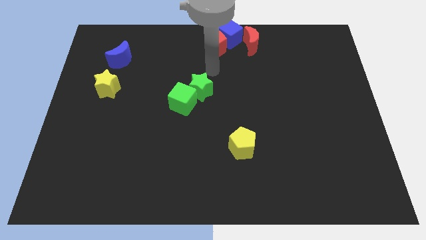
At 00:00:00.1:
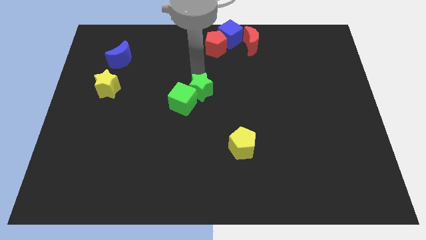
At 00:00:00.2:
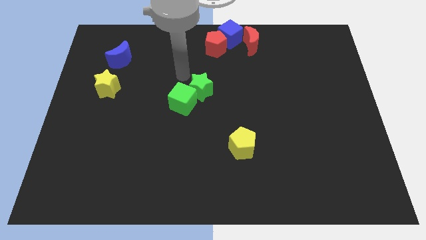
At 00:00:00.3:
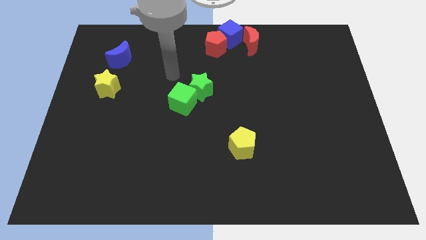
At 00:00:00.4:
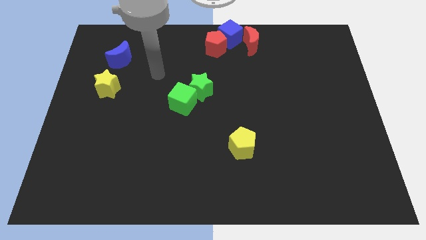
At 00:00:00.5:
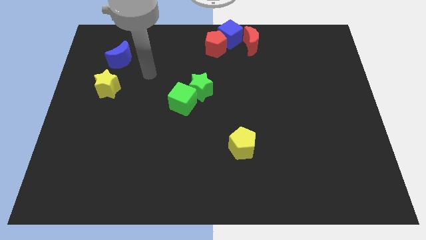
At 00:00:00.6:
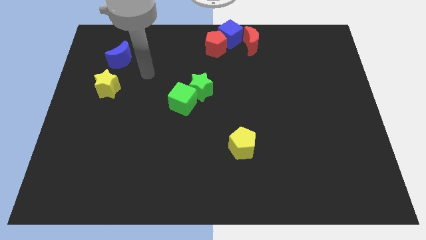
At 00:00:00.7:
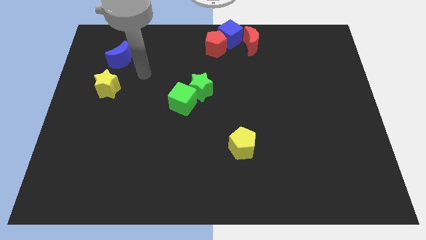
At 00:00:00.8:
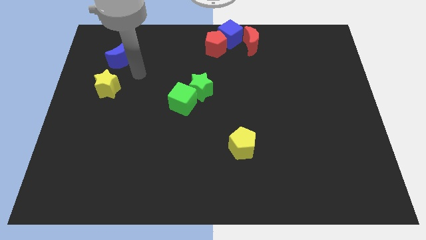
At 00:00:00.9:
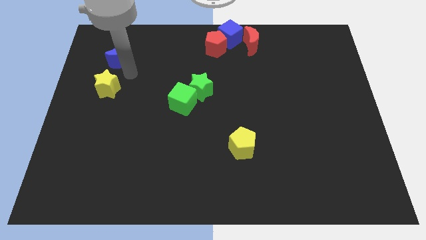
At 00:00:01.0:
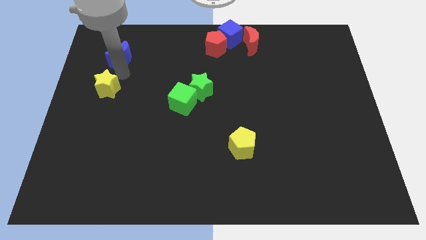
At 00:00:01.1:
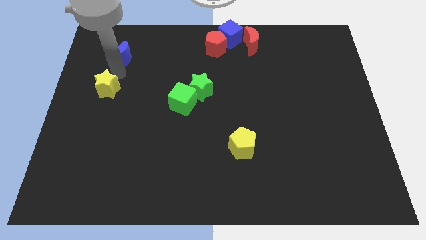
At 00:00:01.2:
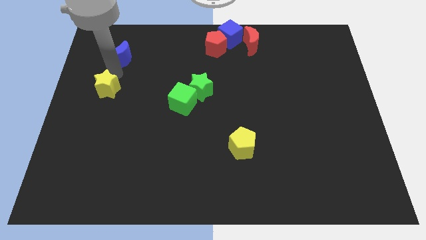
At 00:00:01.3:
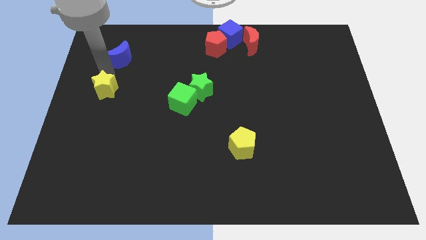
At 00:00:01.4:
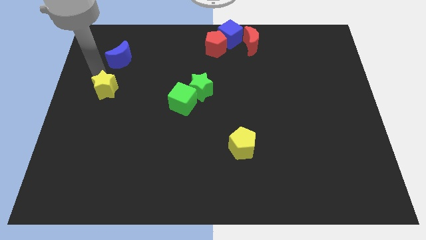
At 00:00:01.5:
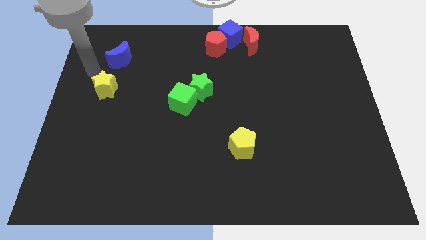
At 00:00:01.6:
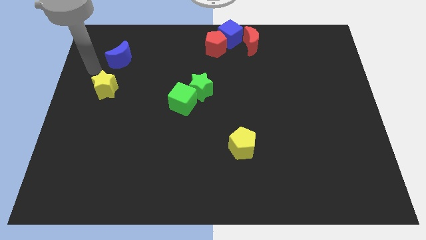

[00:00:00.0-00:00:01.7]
push the arm towards the yellow star

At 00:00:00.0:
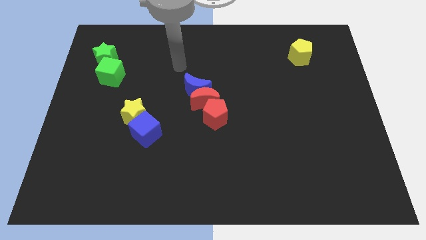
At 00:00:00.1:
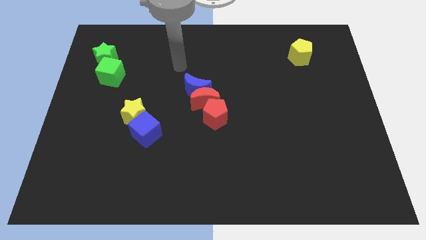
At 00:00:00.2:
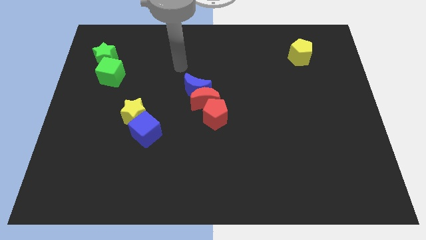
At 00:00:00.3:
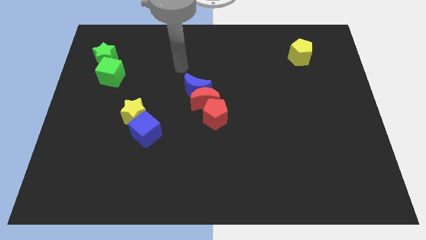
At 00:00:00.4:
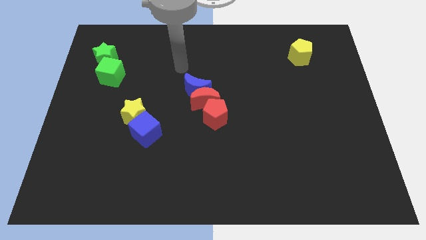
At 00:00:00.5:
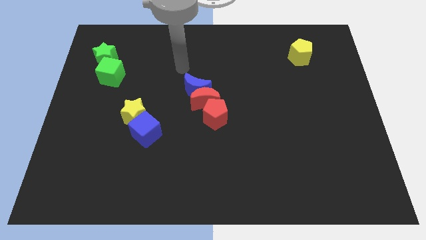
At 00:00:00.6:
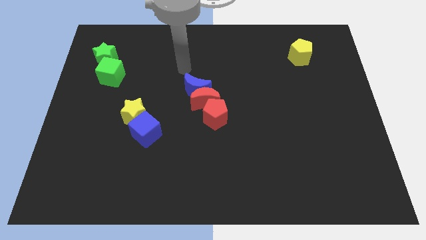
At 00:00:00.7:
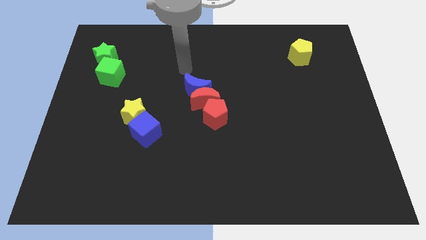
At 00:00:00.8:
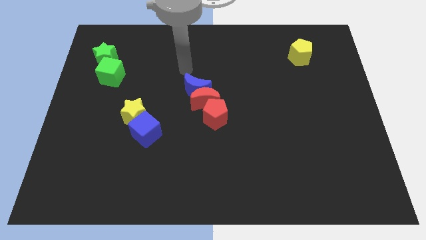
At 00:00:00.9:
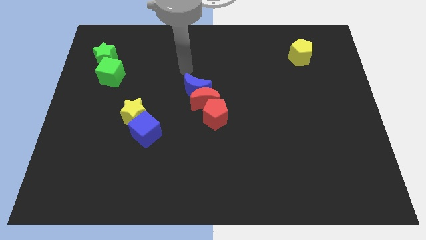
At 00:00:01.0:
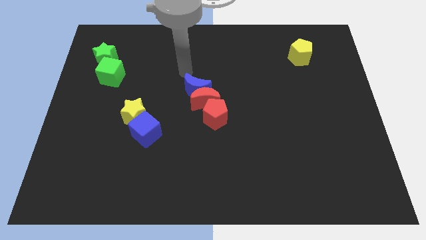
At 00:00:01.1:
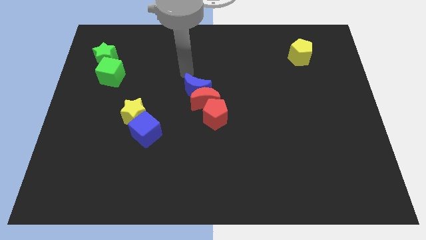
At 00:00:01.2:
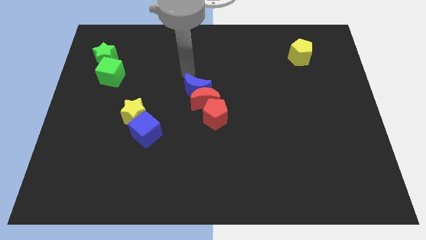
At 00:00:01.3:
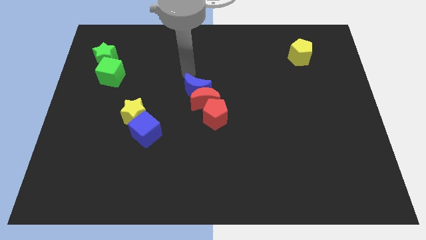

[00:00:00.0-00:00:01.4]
point your arm at the top of blue moon

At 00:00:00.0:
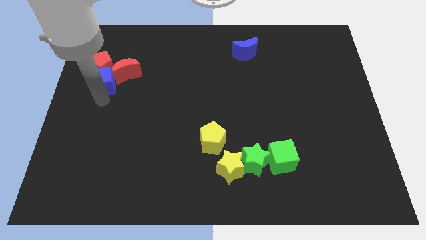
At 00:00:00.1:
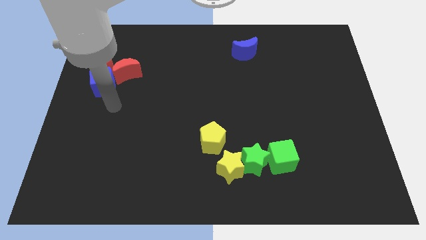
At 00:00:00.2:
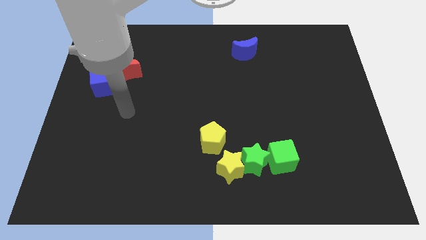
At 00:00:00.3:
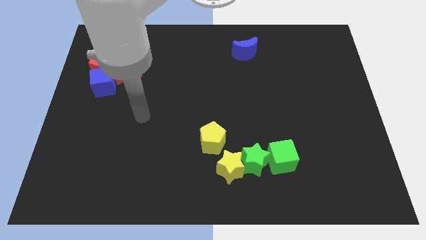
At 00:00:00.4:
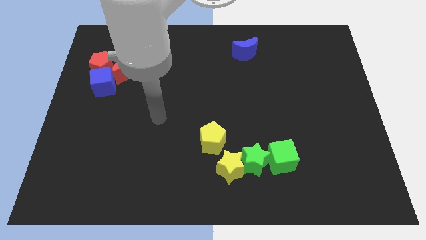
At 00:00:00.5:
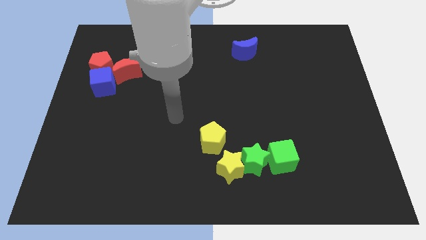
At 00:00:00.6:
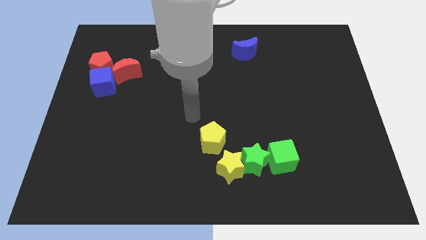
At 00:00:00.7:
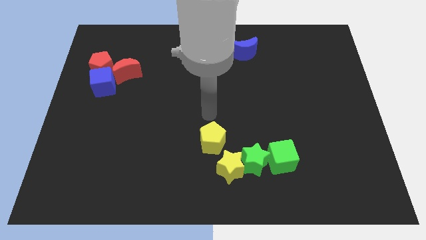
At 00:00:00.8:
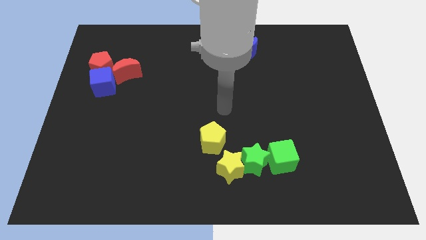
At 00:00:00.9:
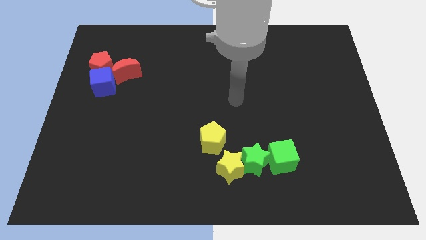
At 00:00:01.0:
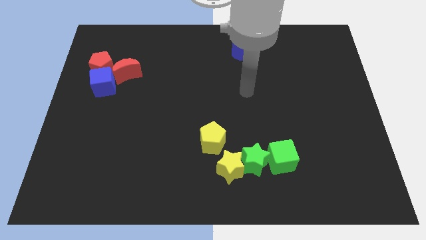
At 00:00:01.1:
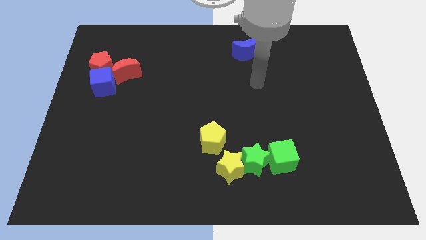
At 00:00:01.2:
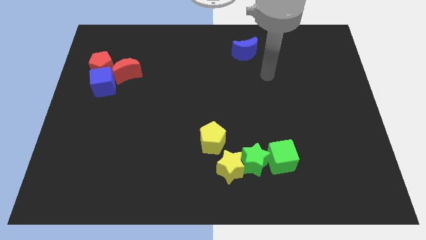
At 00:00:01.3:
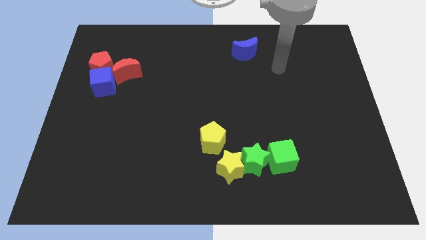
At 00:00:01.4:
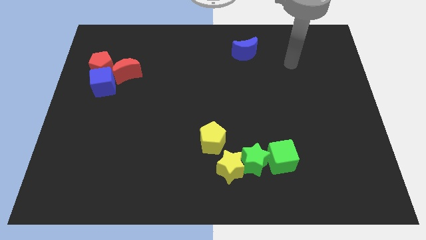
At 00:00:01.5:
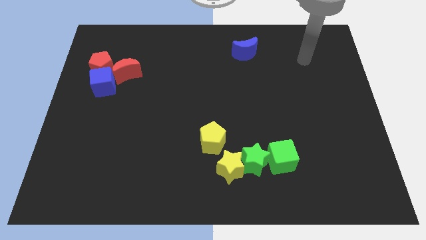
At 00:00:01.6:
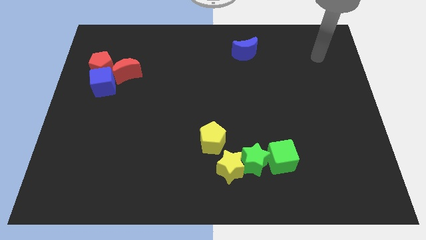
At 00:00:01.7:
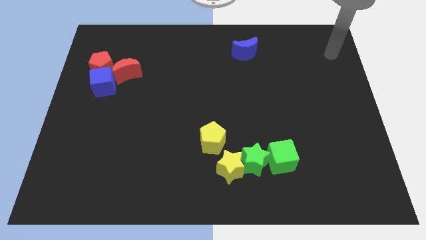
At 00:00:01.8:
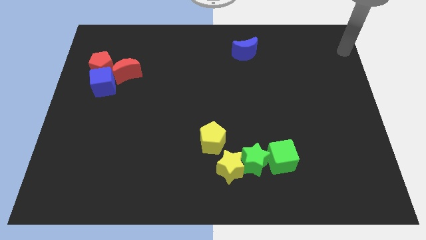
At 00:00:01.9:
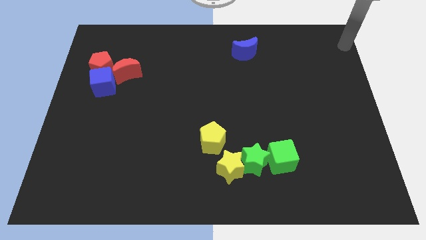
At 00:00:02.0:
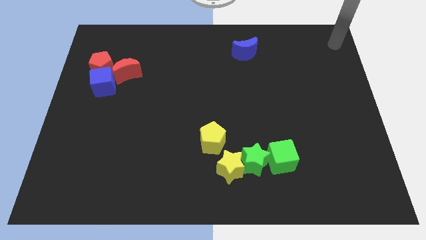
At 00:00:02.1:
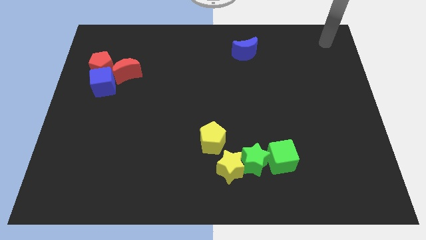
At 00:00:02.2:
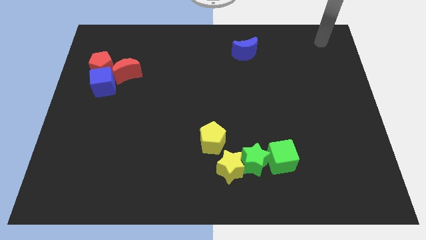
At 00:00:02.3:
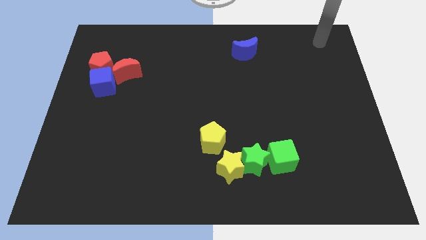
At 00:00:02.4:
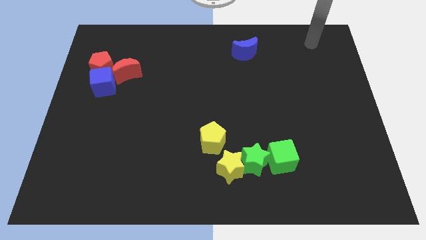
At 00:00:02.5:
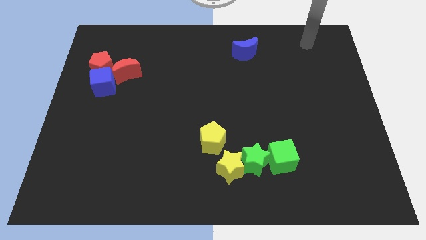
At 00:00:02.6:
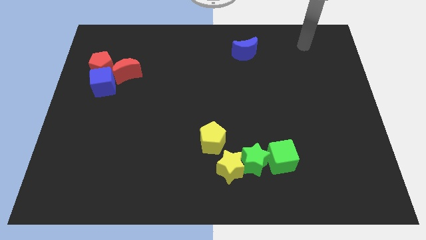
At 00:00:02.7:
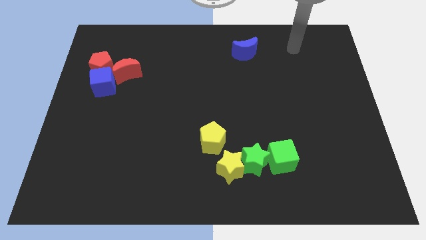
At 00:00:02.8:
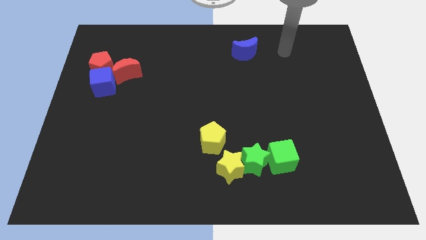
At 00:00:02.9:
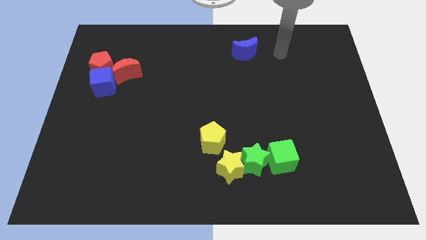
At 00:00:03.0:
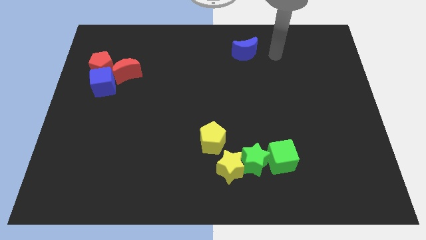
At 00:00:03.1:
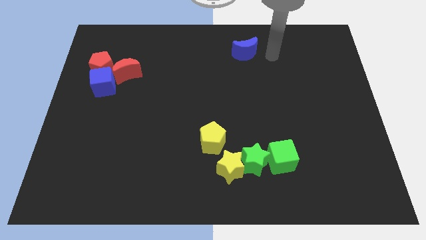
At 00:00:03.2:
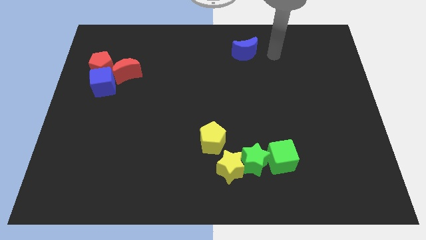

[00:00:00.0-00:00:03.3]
go to the right side of the blue crescent

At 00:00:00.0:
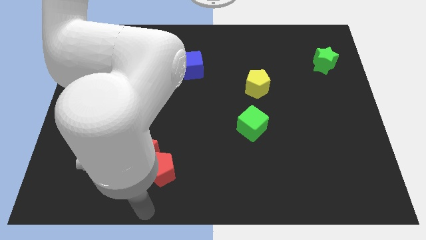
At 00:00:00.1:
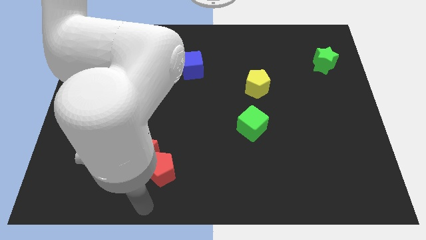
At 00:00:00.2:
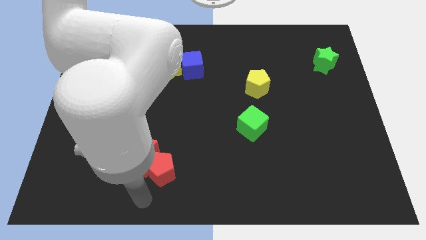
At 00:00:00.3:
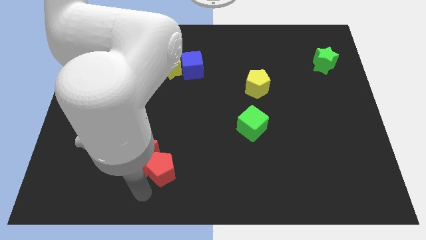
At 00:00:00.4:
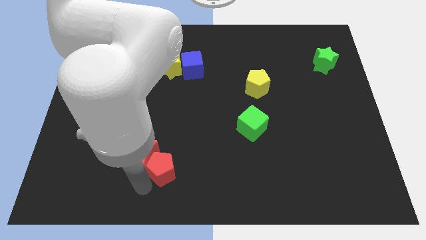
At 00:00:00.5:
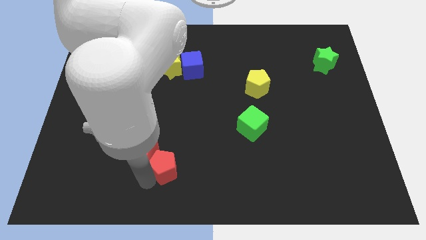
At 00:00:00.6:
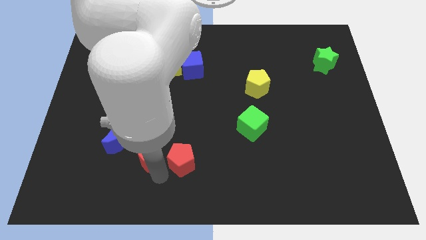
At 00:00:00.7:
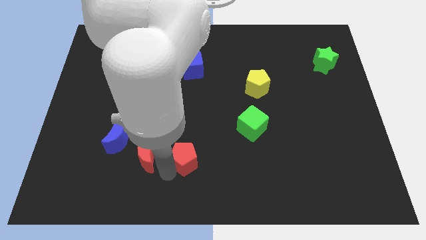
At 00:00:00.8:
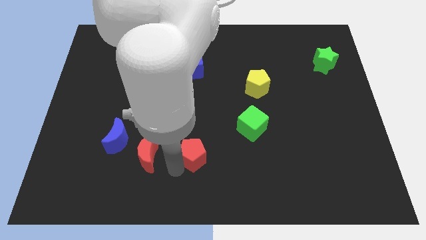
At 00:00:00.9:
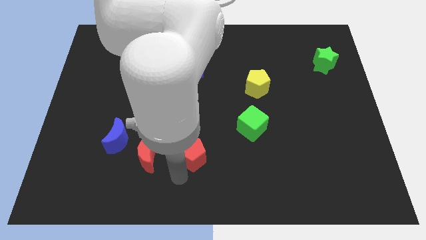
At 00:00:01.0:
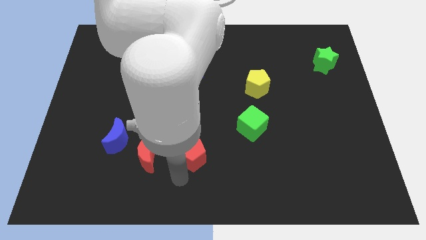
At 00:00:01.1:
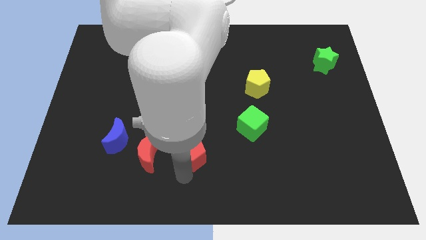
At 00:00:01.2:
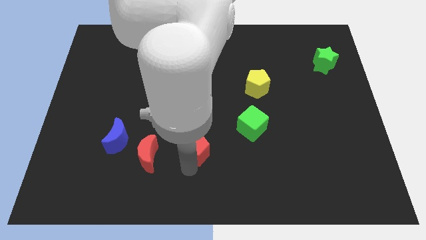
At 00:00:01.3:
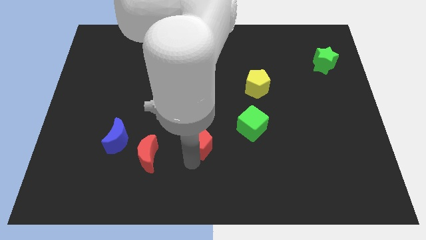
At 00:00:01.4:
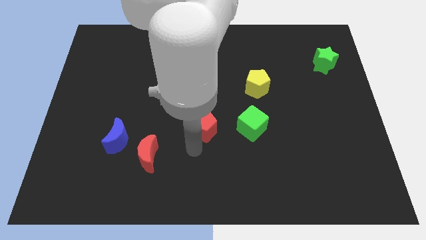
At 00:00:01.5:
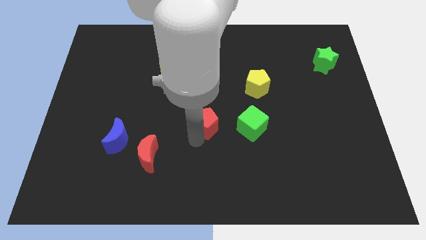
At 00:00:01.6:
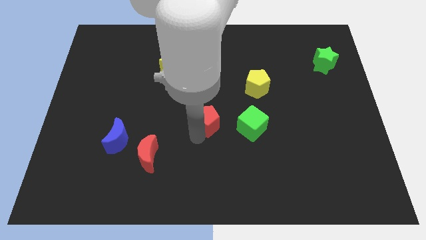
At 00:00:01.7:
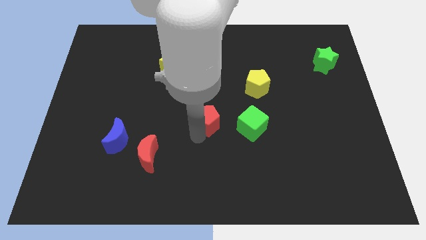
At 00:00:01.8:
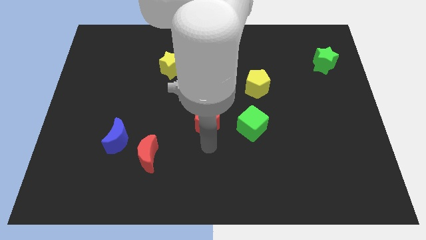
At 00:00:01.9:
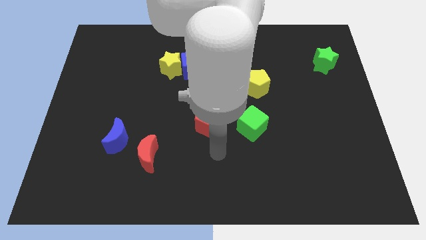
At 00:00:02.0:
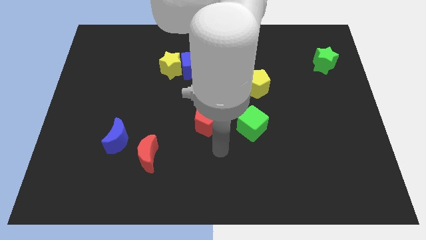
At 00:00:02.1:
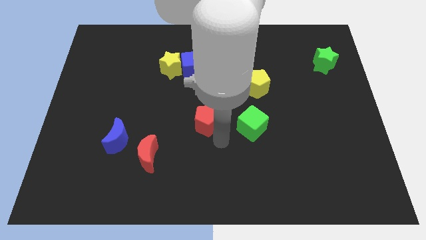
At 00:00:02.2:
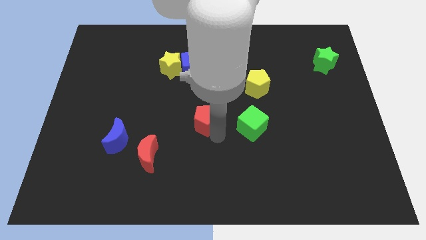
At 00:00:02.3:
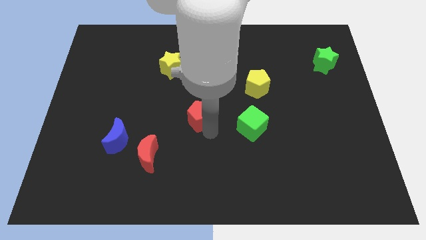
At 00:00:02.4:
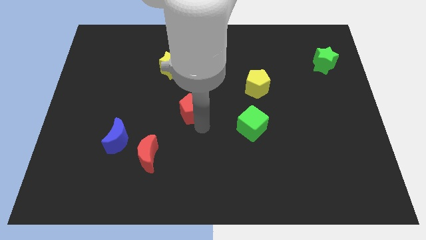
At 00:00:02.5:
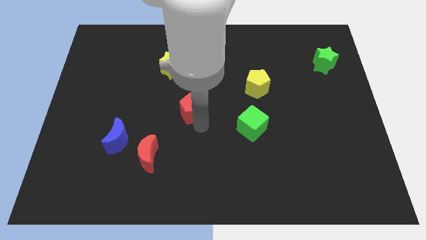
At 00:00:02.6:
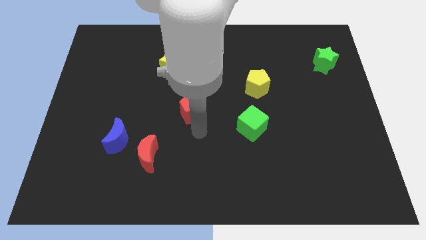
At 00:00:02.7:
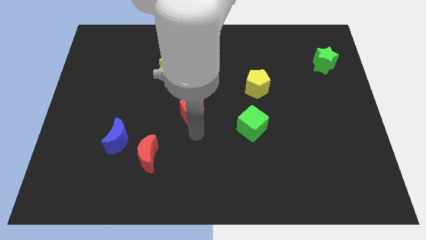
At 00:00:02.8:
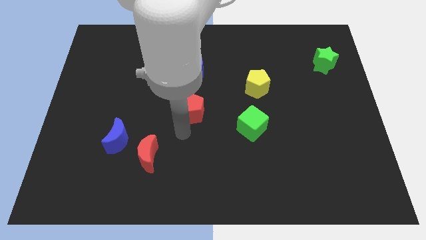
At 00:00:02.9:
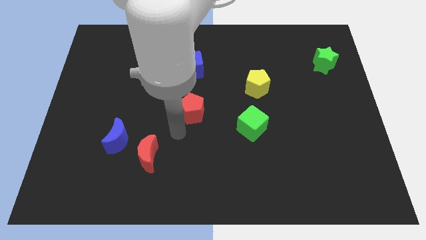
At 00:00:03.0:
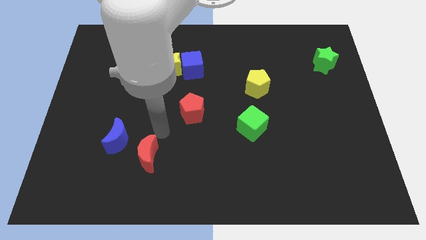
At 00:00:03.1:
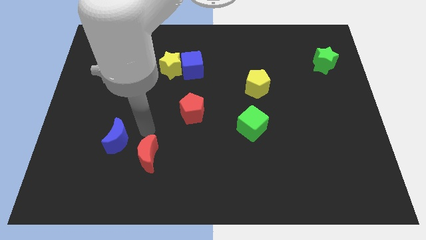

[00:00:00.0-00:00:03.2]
push the red pentagon below the blue cube
